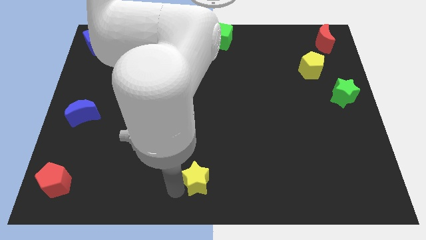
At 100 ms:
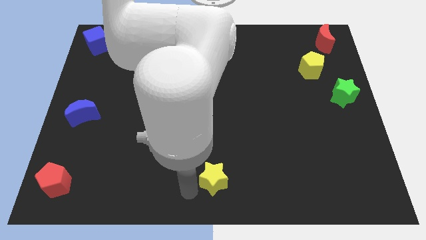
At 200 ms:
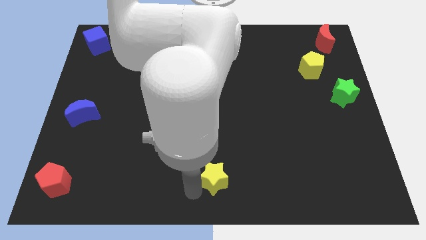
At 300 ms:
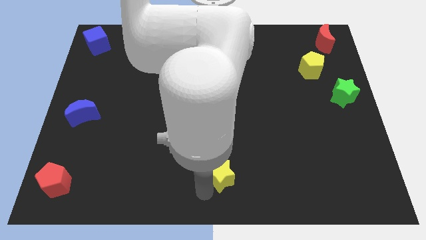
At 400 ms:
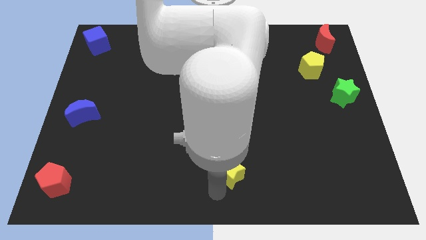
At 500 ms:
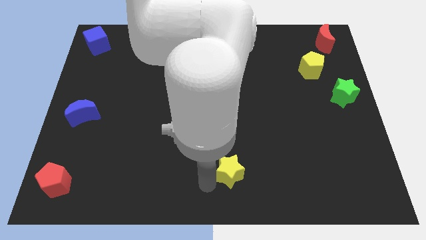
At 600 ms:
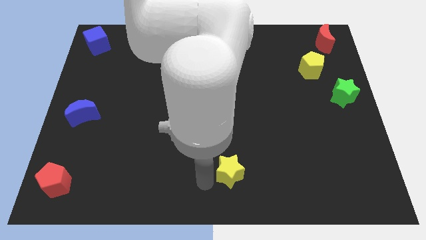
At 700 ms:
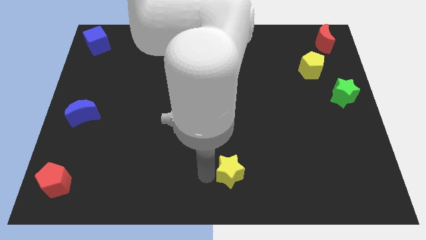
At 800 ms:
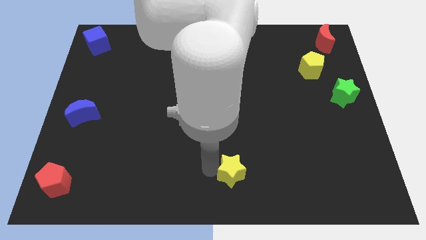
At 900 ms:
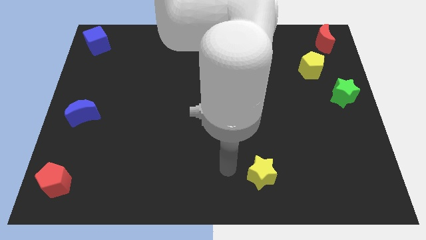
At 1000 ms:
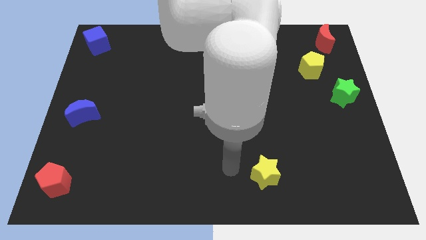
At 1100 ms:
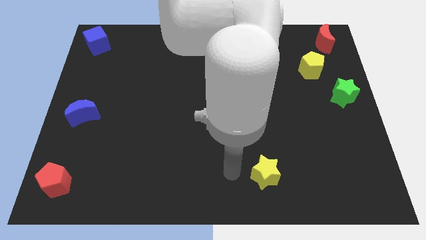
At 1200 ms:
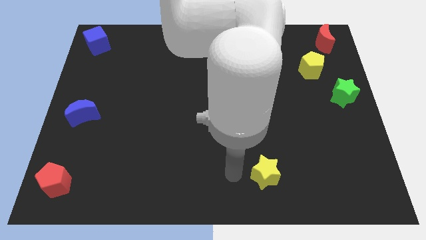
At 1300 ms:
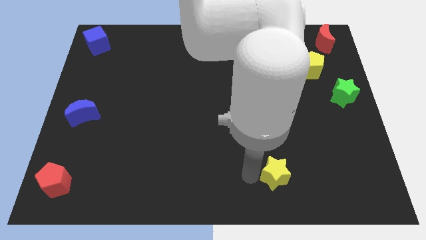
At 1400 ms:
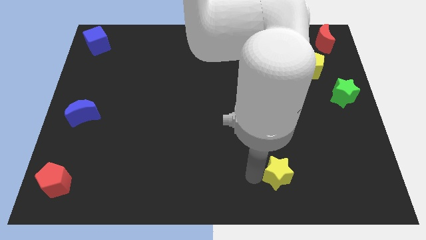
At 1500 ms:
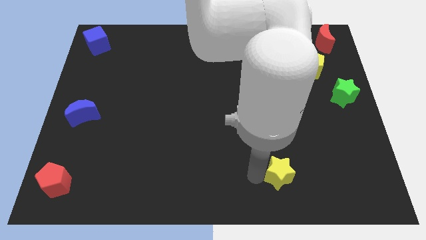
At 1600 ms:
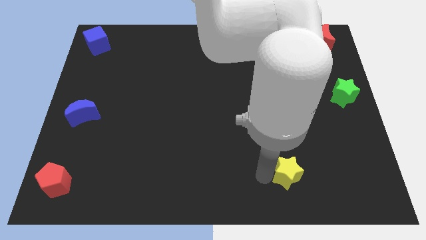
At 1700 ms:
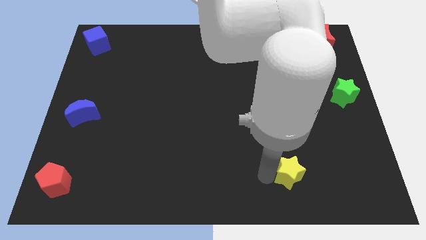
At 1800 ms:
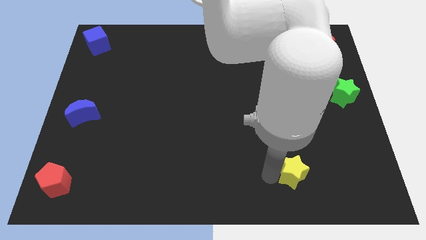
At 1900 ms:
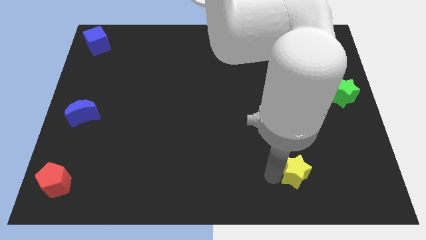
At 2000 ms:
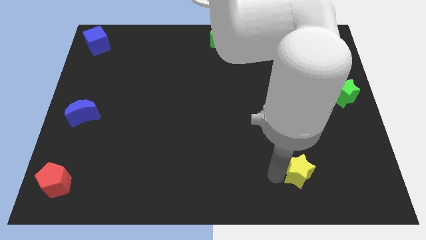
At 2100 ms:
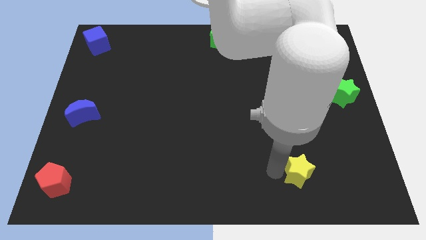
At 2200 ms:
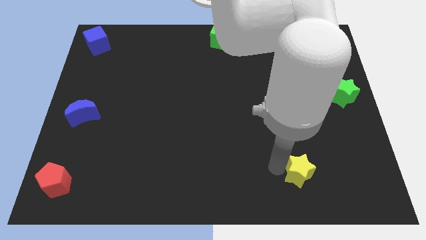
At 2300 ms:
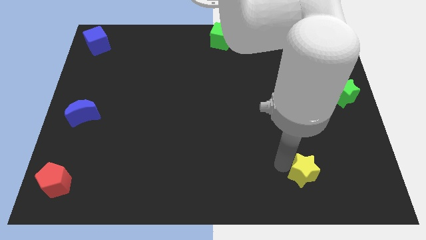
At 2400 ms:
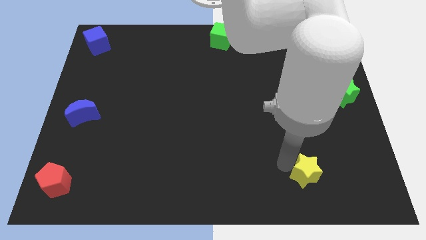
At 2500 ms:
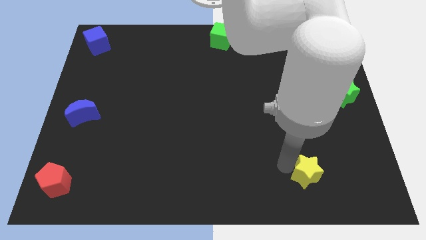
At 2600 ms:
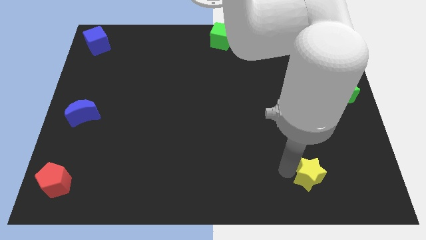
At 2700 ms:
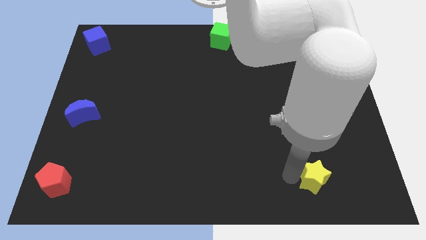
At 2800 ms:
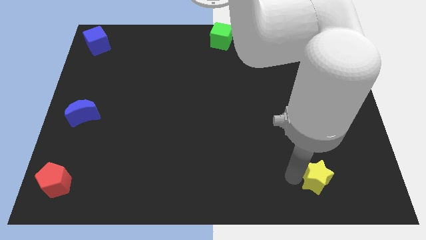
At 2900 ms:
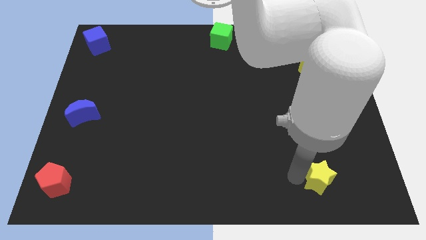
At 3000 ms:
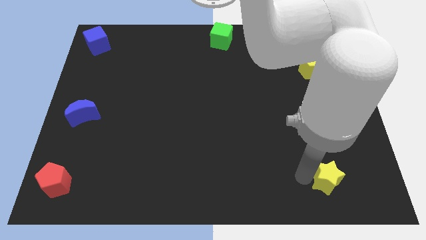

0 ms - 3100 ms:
push the yellow star towards the bottom right corner

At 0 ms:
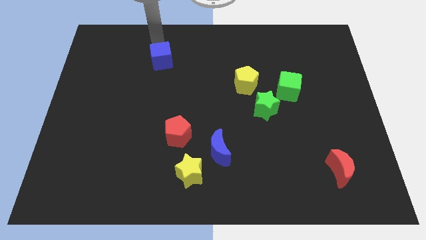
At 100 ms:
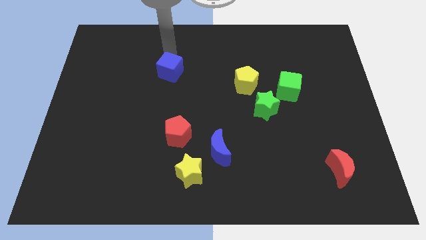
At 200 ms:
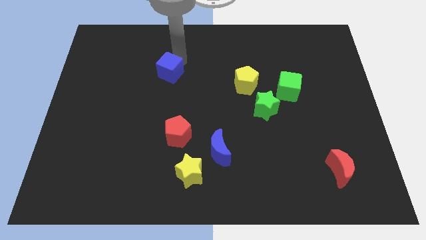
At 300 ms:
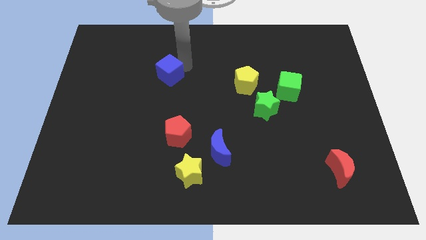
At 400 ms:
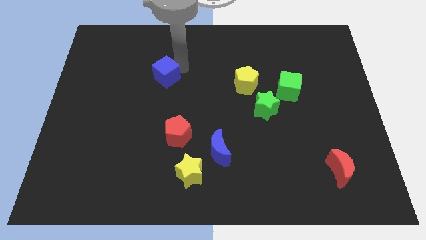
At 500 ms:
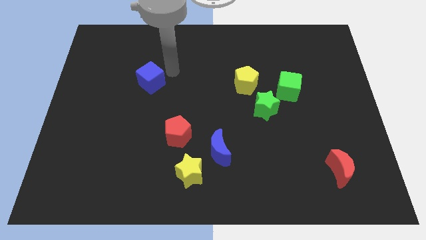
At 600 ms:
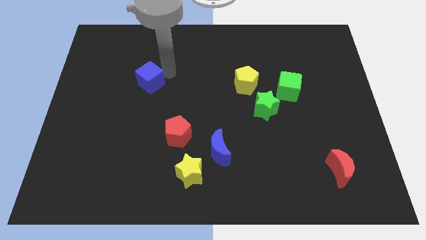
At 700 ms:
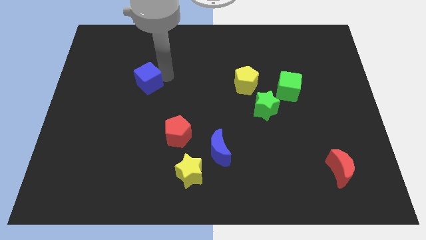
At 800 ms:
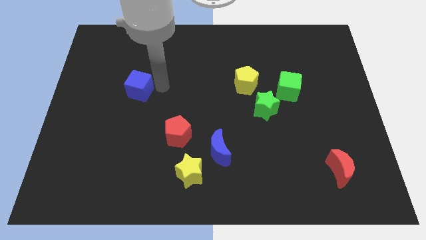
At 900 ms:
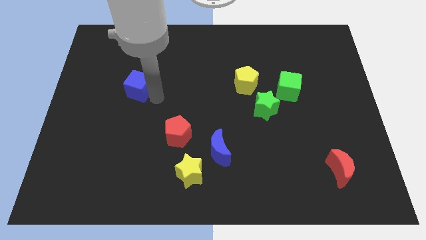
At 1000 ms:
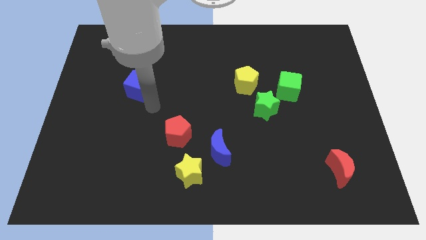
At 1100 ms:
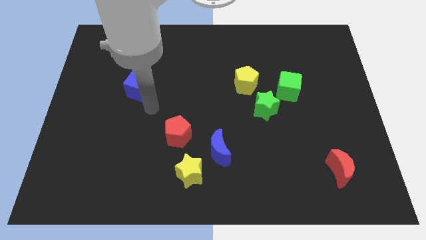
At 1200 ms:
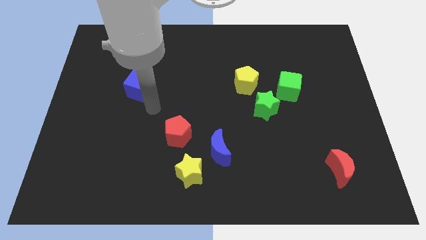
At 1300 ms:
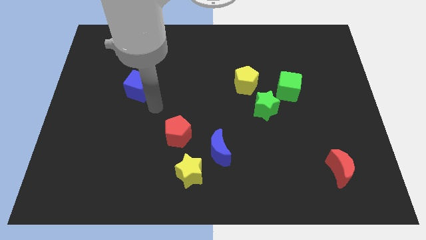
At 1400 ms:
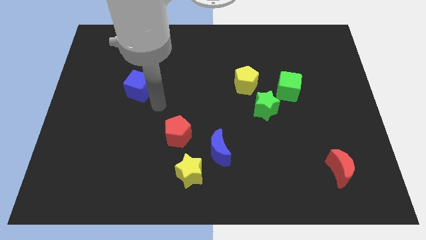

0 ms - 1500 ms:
push the blue cube to the center left

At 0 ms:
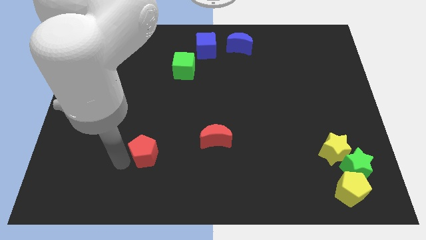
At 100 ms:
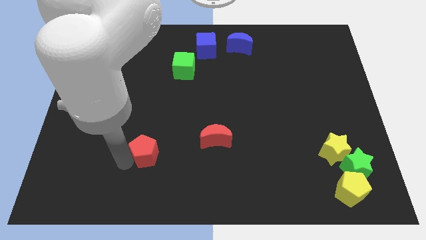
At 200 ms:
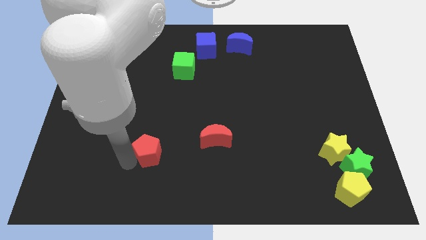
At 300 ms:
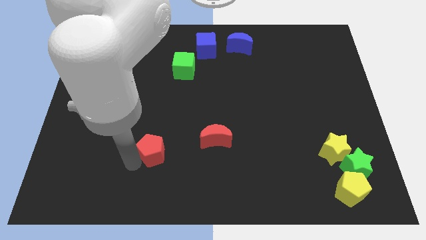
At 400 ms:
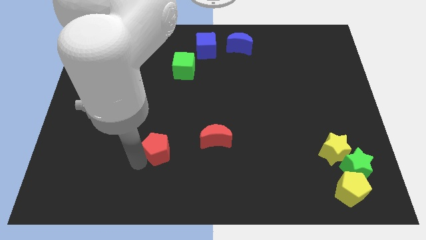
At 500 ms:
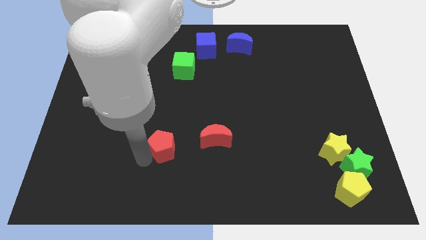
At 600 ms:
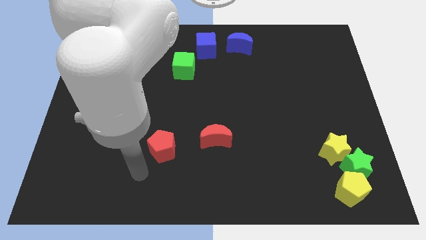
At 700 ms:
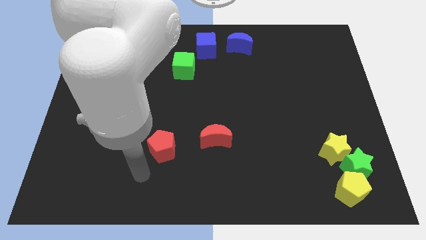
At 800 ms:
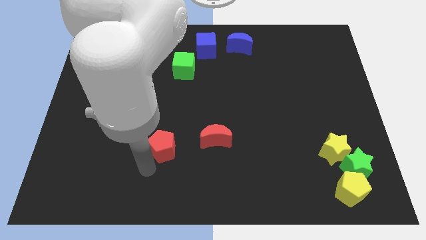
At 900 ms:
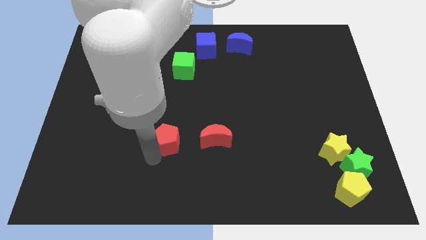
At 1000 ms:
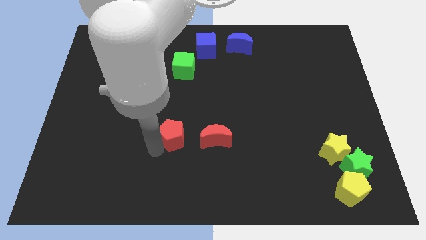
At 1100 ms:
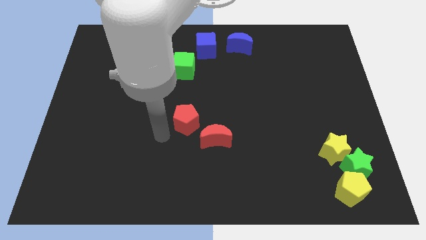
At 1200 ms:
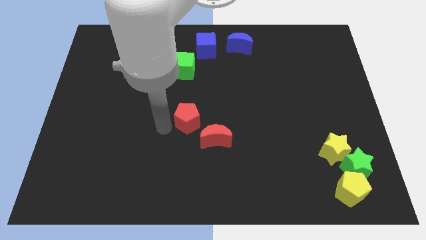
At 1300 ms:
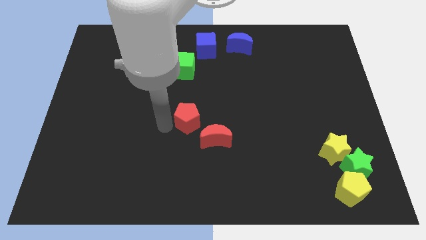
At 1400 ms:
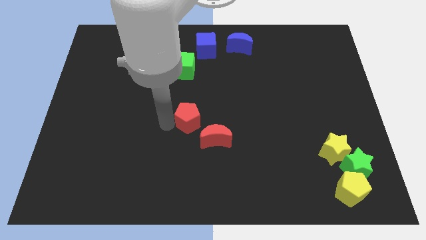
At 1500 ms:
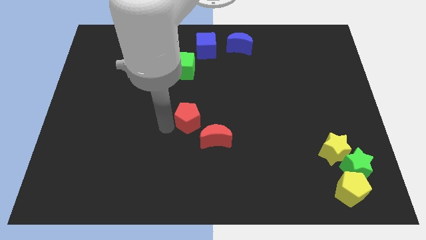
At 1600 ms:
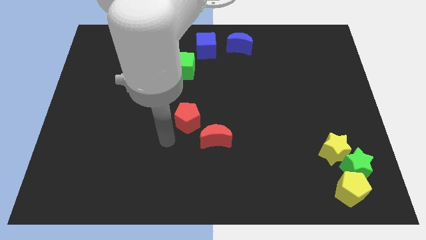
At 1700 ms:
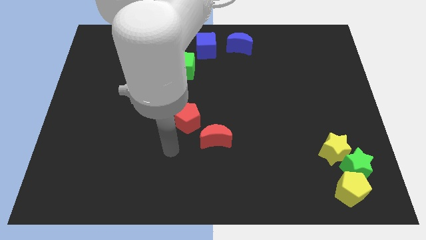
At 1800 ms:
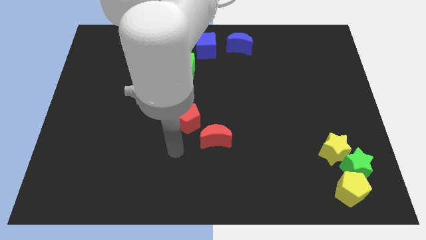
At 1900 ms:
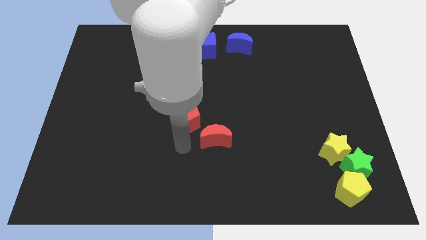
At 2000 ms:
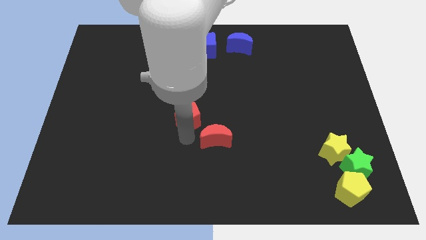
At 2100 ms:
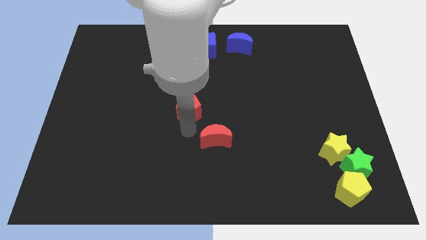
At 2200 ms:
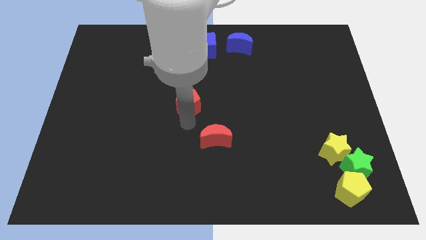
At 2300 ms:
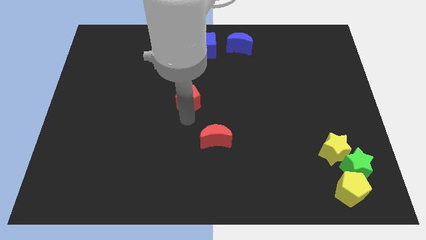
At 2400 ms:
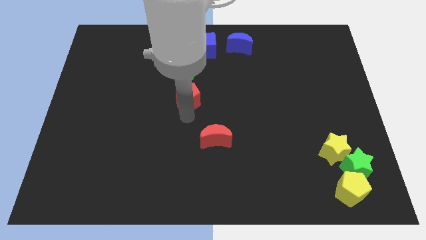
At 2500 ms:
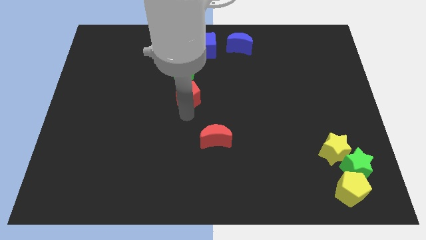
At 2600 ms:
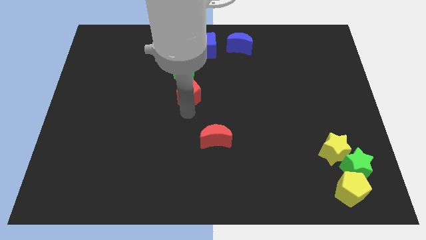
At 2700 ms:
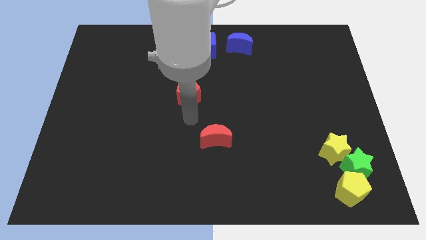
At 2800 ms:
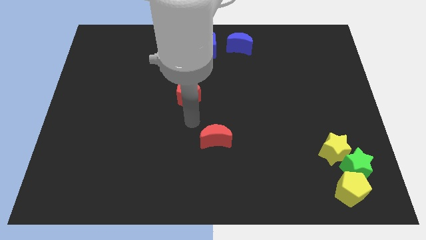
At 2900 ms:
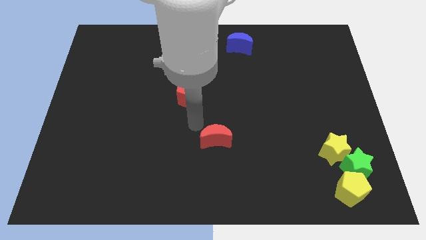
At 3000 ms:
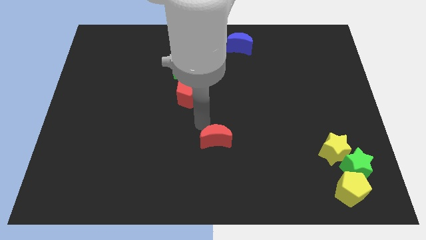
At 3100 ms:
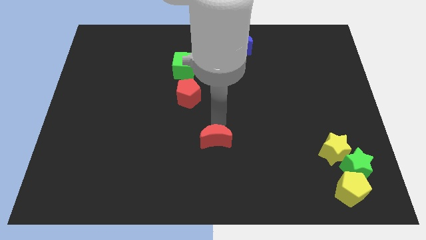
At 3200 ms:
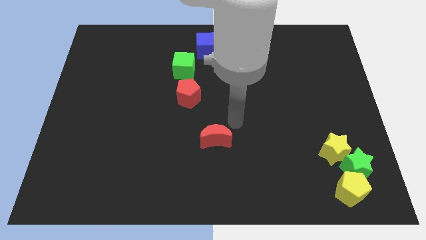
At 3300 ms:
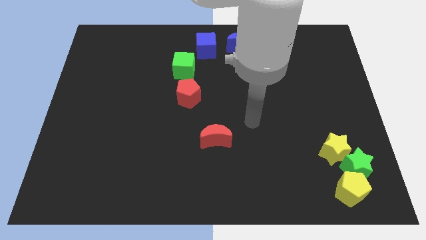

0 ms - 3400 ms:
place the red pentagon down to green cube

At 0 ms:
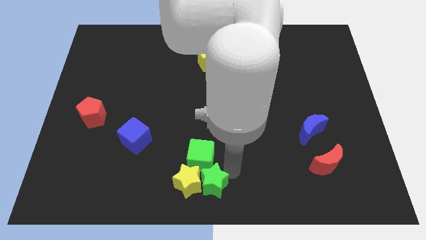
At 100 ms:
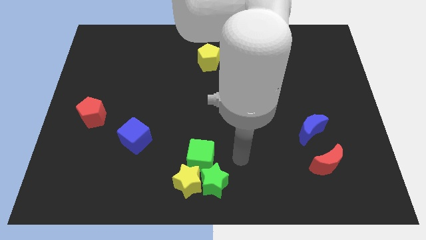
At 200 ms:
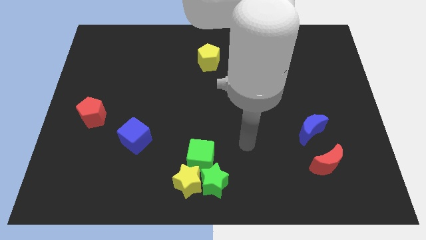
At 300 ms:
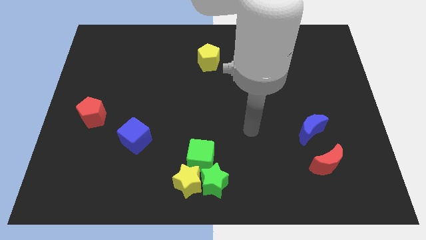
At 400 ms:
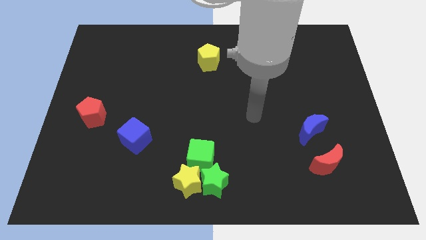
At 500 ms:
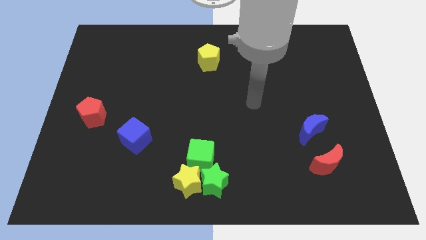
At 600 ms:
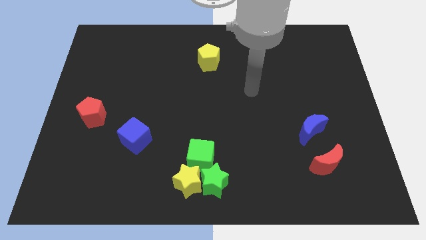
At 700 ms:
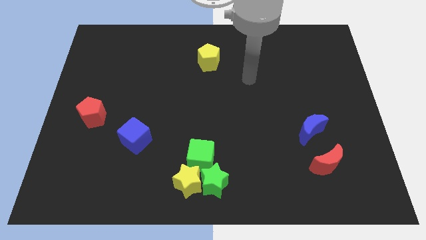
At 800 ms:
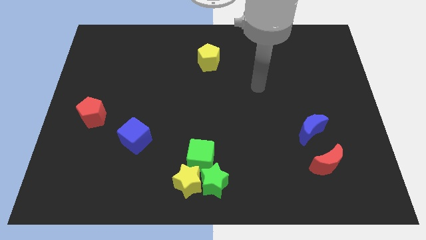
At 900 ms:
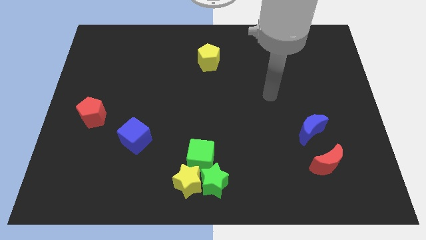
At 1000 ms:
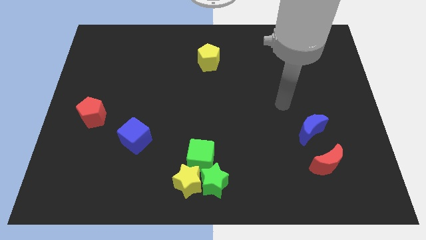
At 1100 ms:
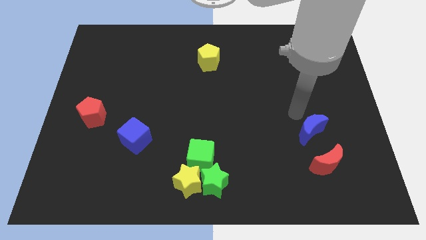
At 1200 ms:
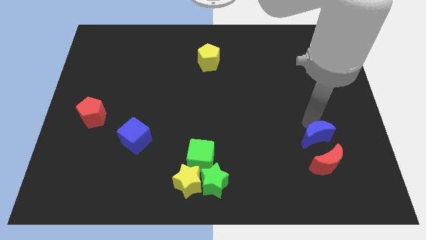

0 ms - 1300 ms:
point your arm at the top of the blue crescent
